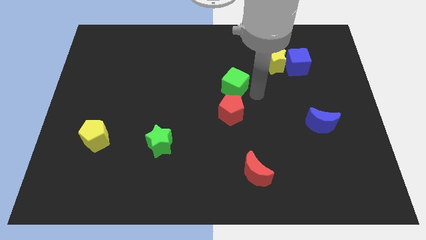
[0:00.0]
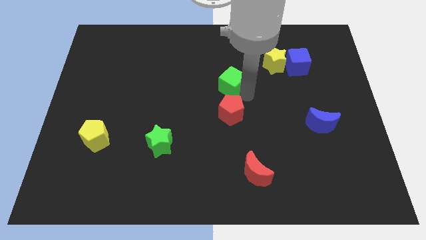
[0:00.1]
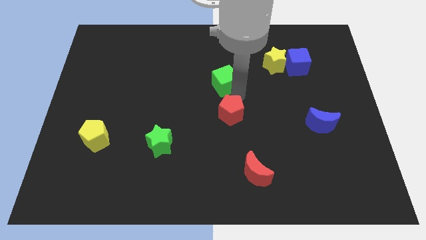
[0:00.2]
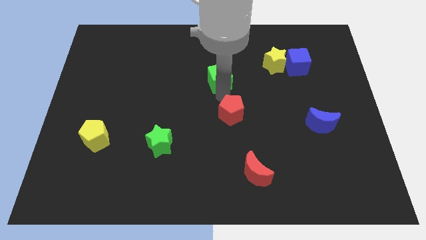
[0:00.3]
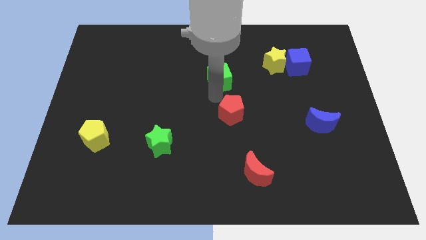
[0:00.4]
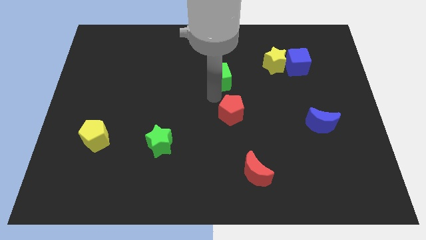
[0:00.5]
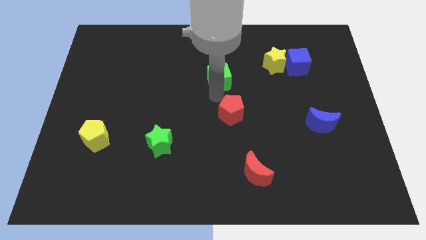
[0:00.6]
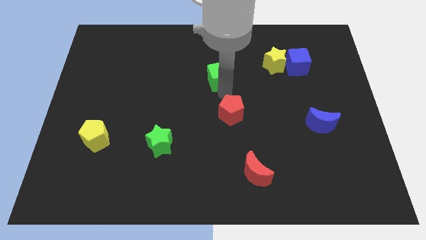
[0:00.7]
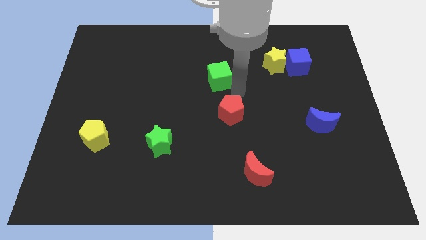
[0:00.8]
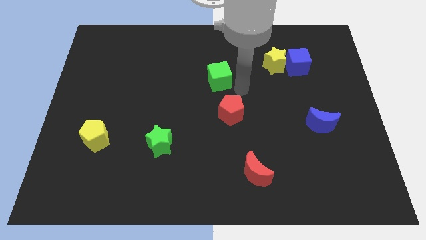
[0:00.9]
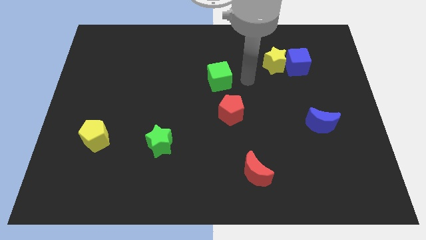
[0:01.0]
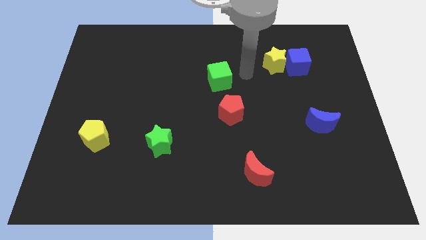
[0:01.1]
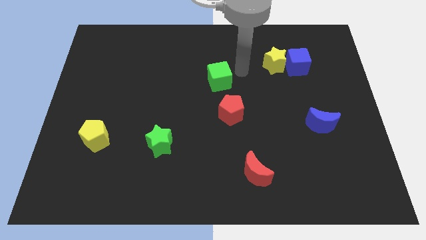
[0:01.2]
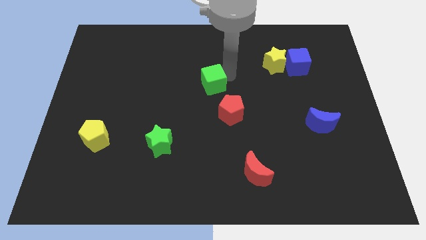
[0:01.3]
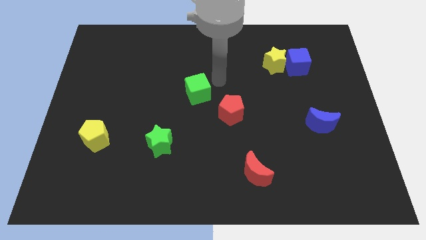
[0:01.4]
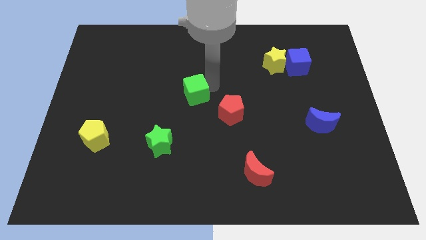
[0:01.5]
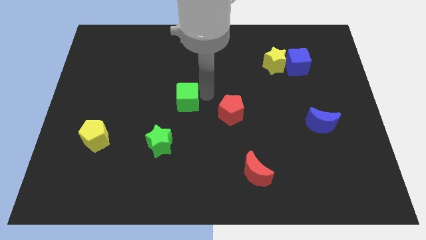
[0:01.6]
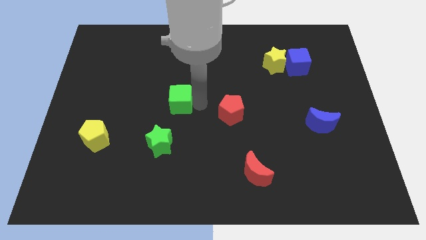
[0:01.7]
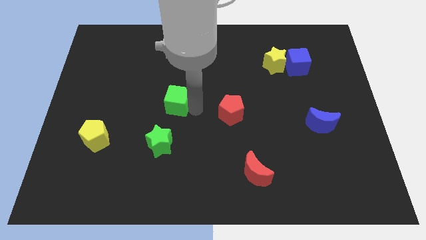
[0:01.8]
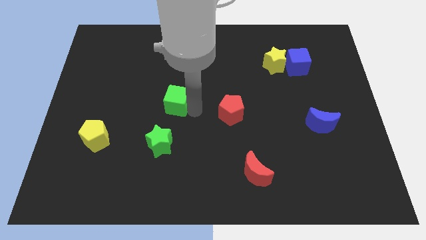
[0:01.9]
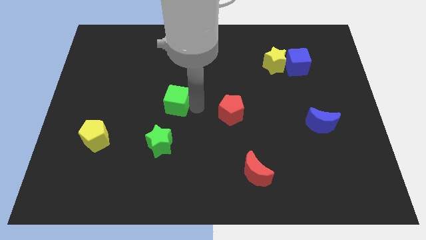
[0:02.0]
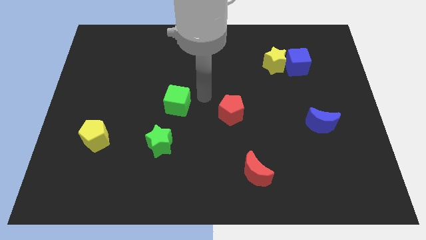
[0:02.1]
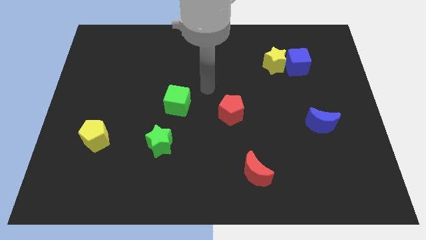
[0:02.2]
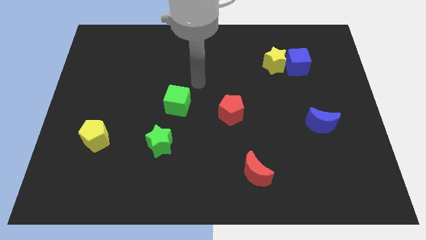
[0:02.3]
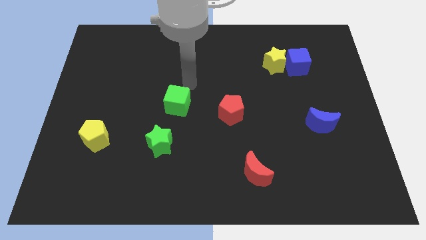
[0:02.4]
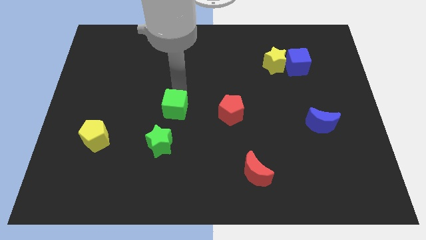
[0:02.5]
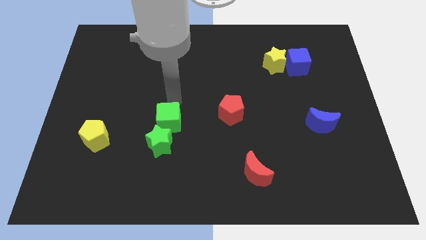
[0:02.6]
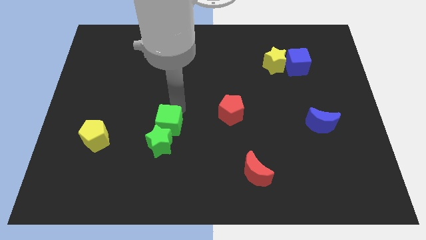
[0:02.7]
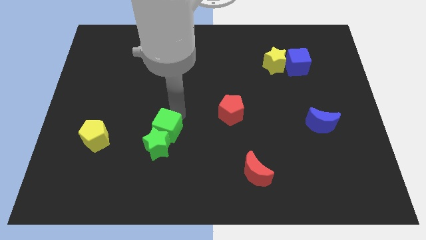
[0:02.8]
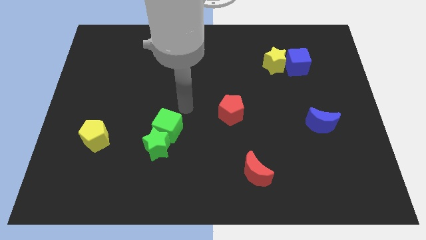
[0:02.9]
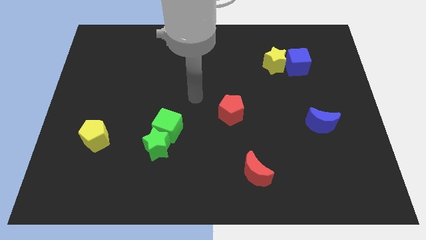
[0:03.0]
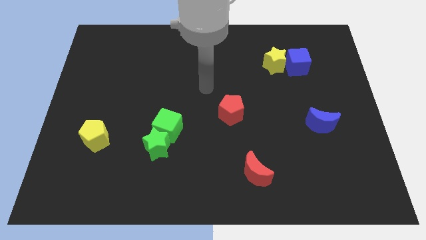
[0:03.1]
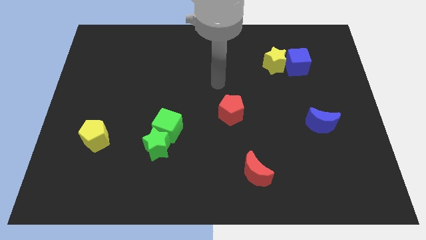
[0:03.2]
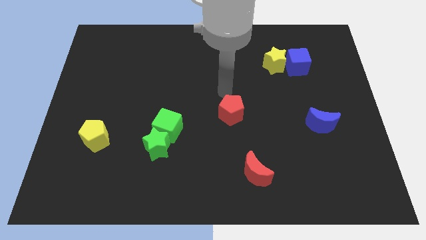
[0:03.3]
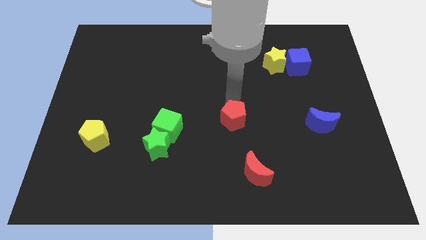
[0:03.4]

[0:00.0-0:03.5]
place the green cube above the green star

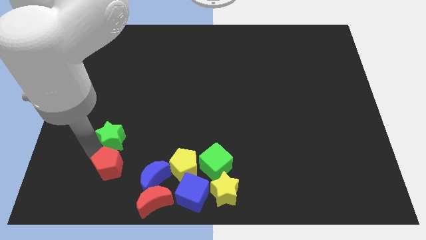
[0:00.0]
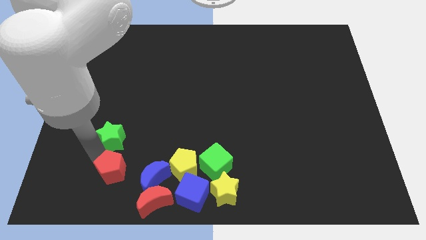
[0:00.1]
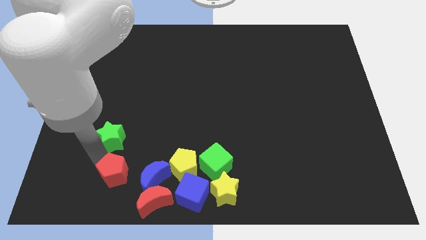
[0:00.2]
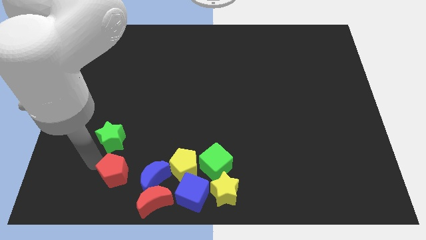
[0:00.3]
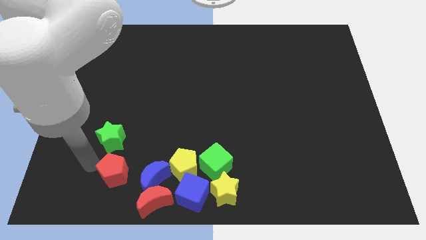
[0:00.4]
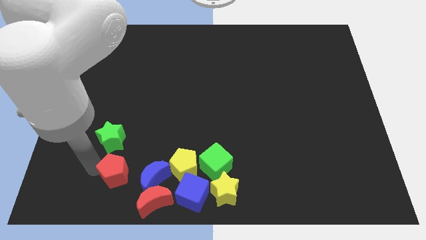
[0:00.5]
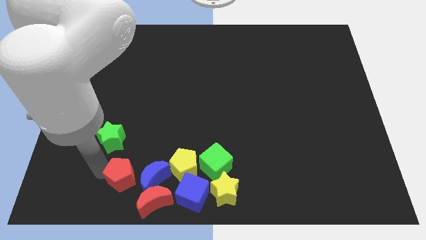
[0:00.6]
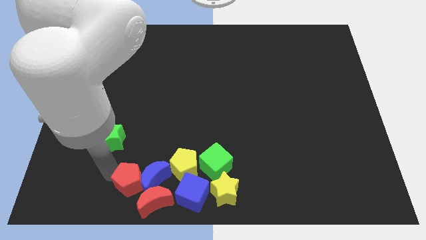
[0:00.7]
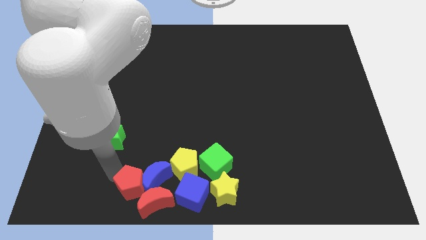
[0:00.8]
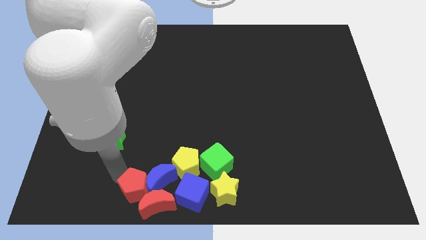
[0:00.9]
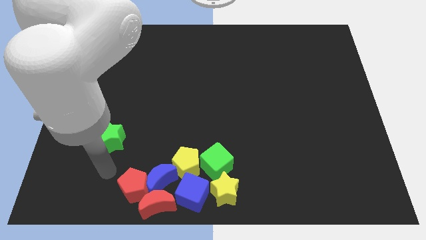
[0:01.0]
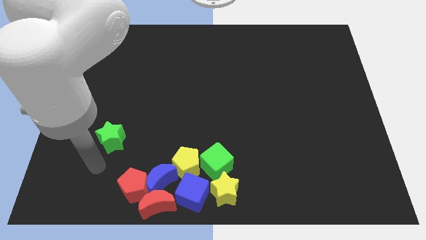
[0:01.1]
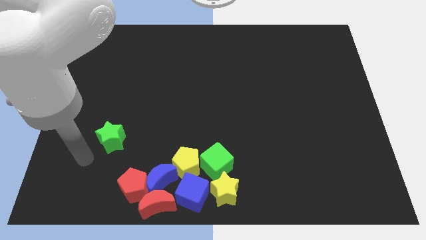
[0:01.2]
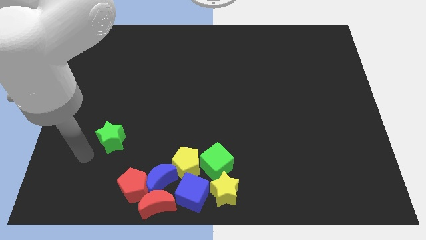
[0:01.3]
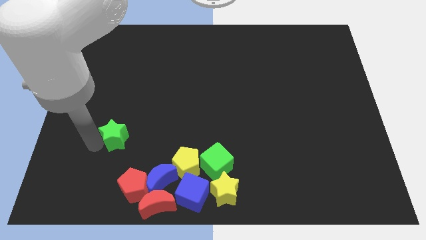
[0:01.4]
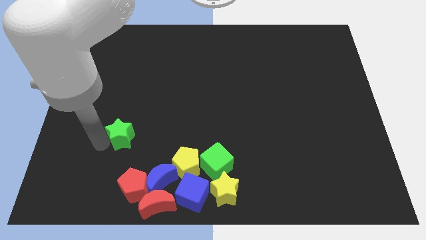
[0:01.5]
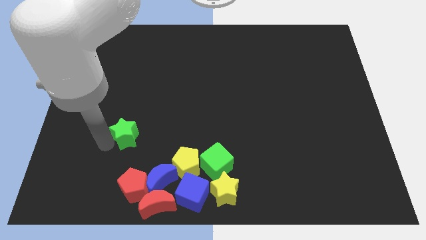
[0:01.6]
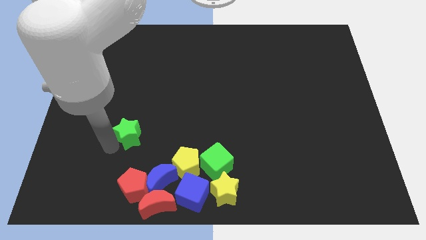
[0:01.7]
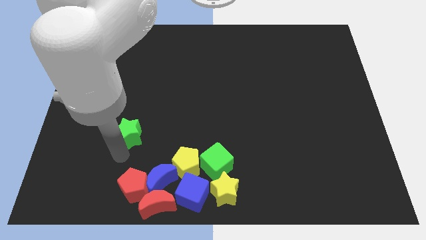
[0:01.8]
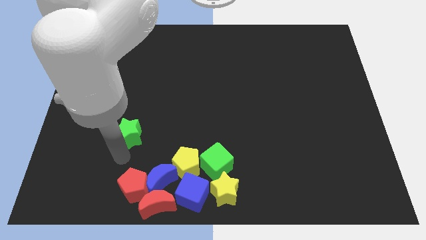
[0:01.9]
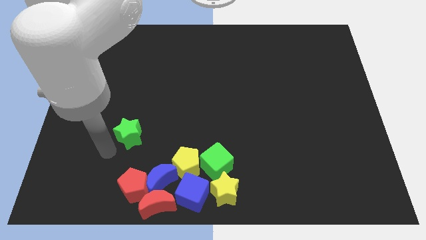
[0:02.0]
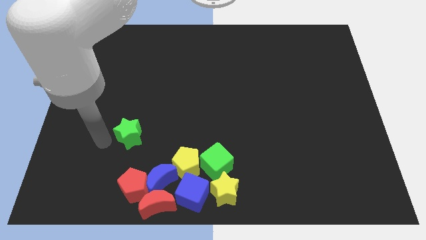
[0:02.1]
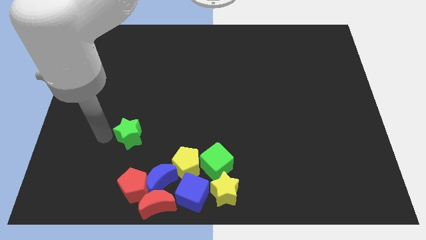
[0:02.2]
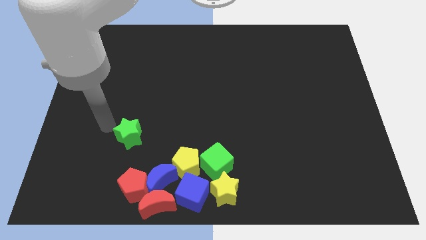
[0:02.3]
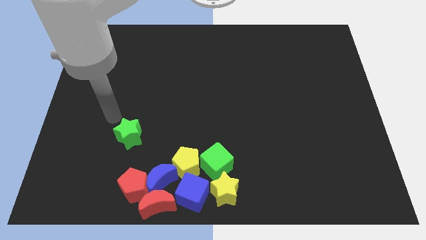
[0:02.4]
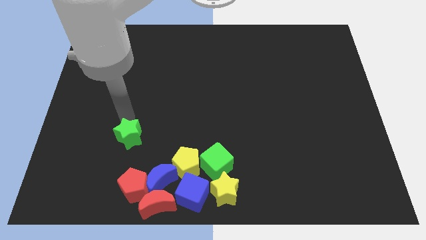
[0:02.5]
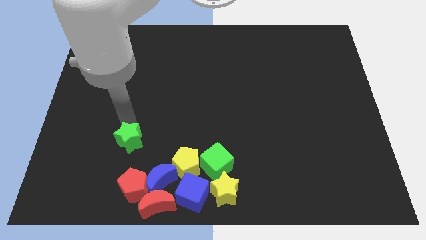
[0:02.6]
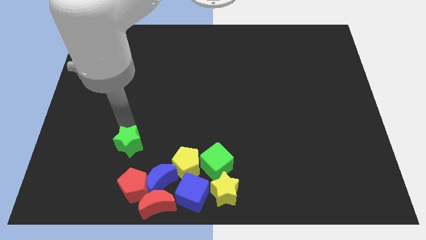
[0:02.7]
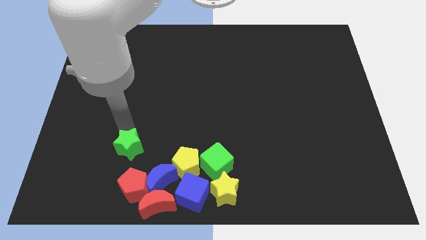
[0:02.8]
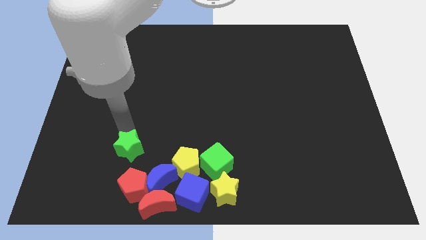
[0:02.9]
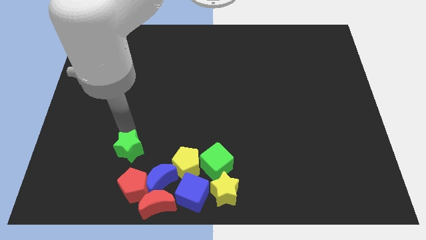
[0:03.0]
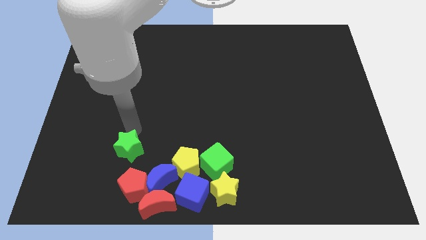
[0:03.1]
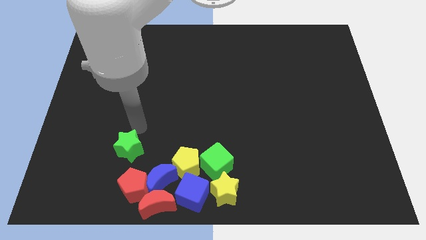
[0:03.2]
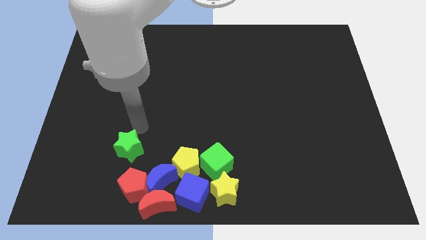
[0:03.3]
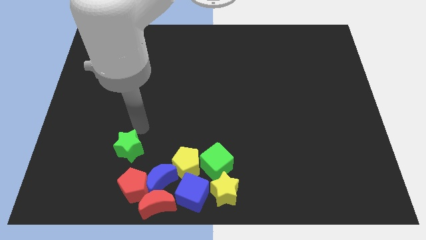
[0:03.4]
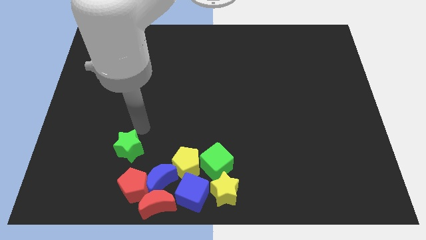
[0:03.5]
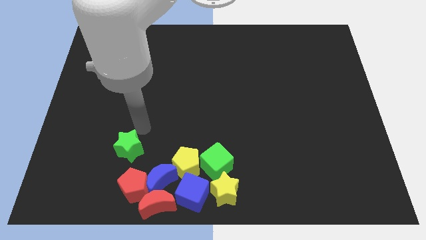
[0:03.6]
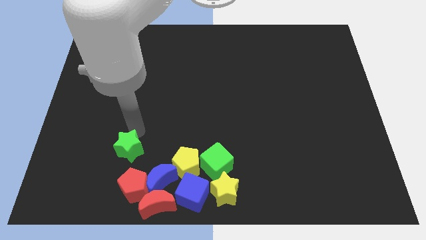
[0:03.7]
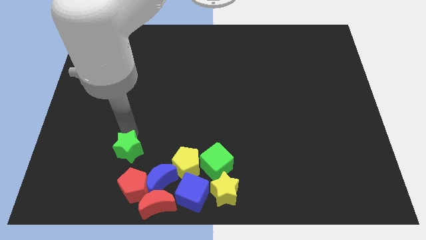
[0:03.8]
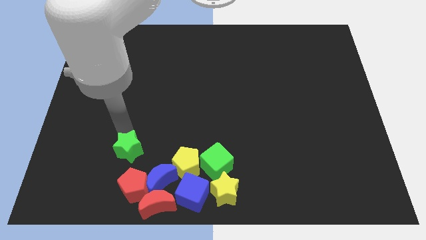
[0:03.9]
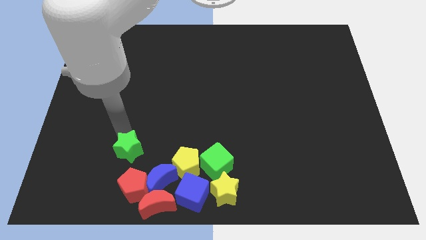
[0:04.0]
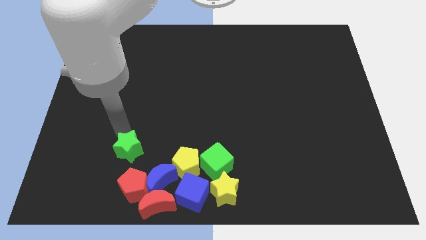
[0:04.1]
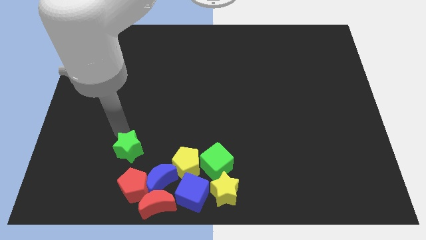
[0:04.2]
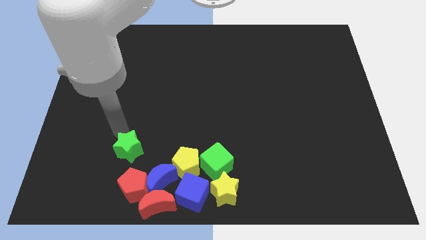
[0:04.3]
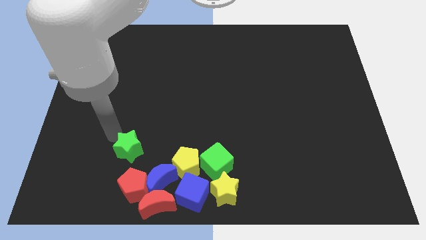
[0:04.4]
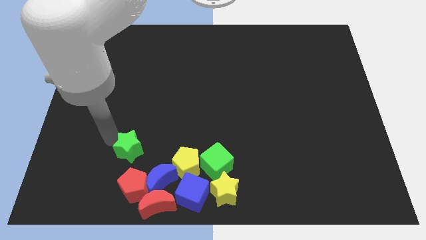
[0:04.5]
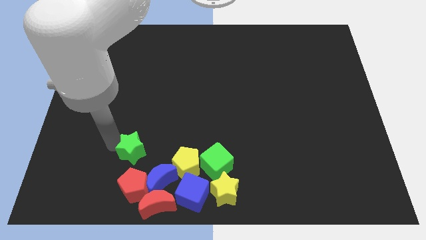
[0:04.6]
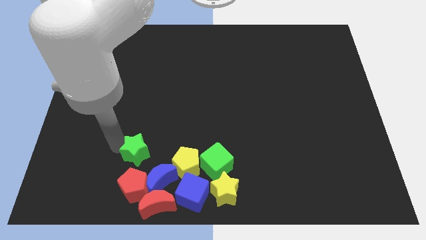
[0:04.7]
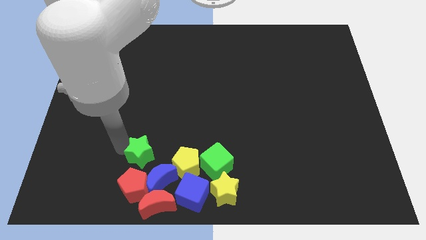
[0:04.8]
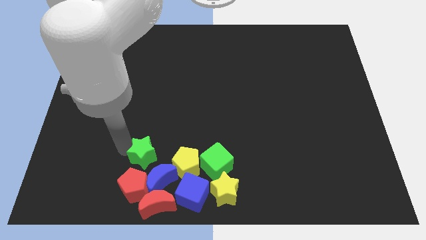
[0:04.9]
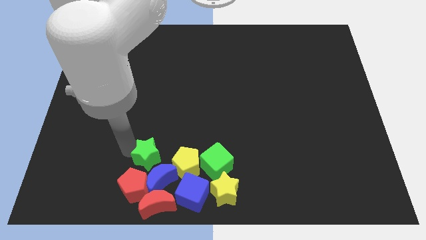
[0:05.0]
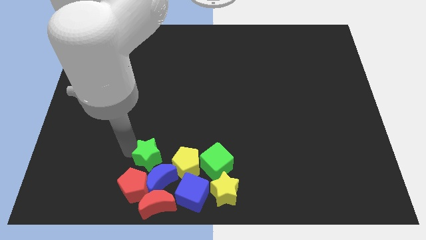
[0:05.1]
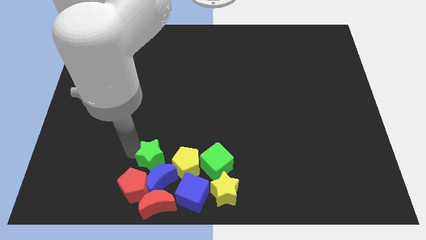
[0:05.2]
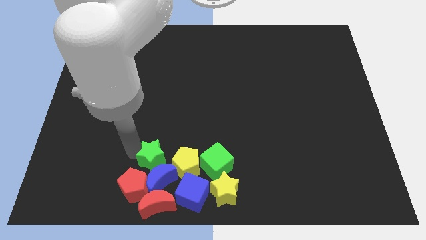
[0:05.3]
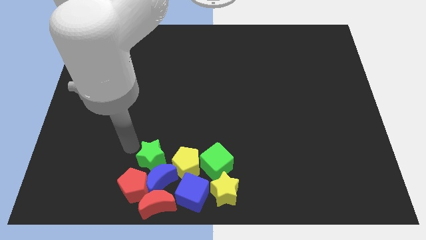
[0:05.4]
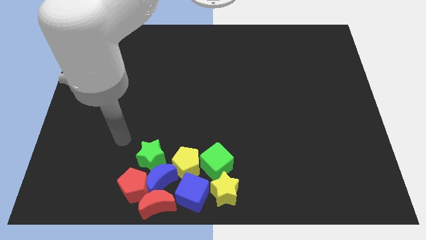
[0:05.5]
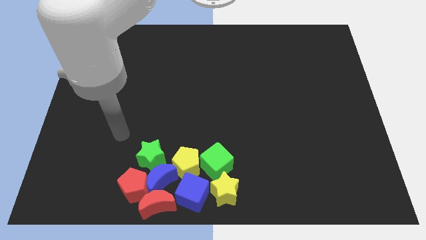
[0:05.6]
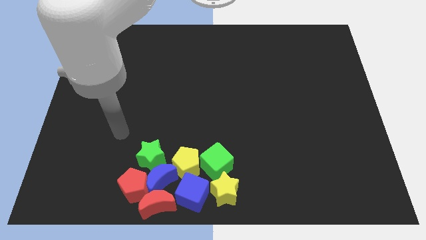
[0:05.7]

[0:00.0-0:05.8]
move the red pentagon and green star to the group of all the blocks
